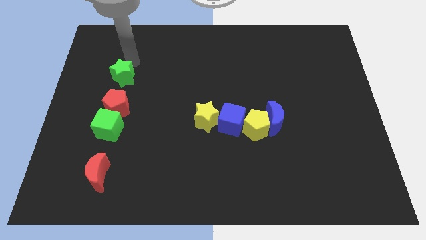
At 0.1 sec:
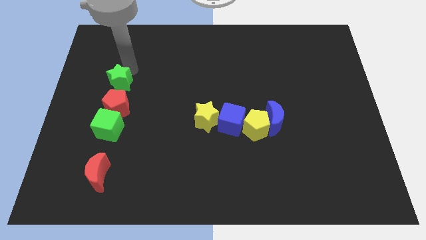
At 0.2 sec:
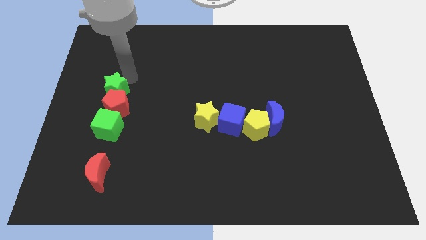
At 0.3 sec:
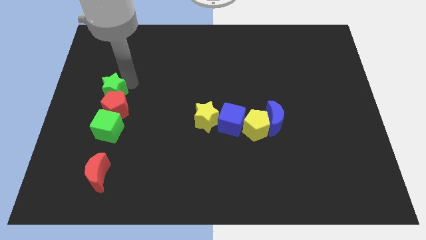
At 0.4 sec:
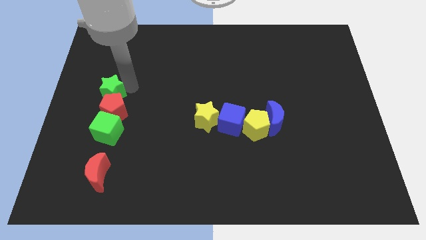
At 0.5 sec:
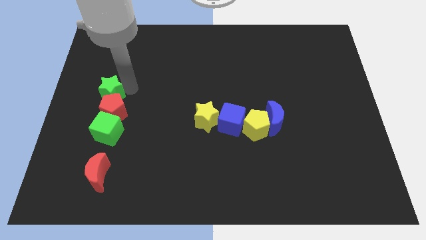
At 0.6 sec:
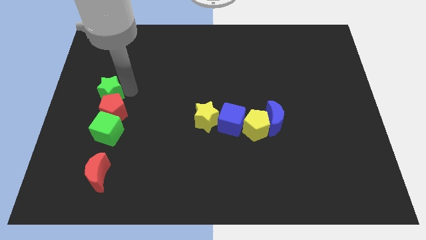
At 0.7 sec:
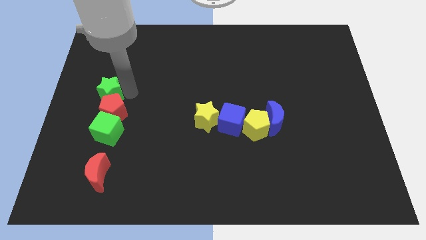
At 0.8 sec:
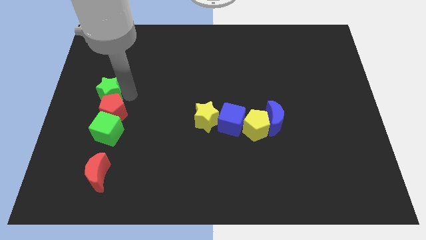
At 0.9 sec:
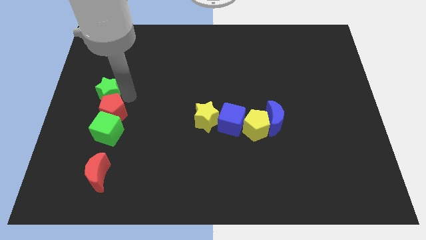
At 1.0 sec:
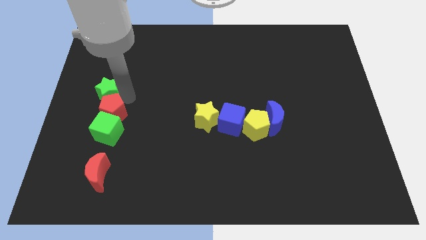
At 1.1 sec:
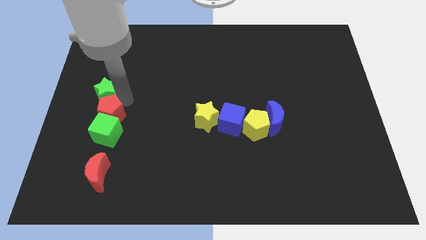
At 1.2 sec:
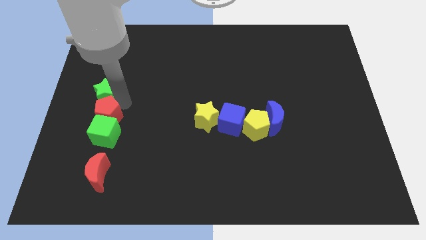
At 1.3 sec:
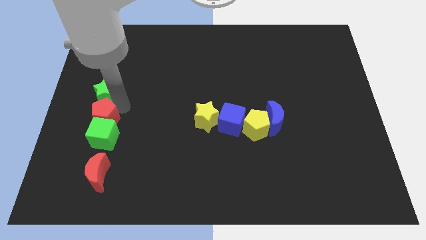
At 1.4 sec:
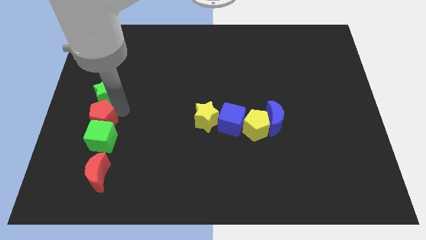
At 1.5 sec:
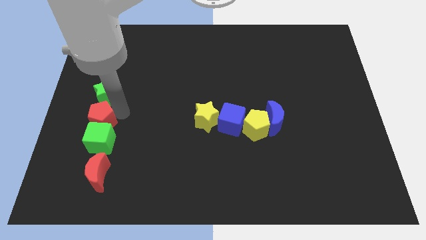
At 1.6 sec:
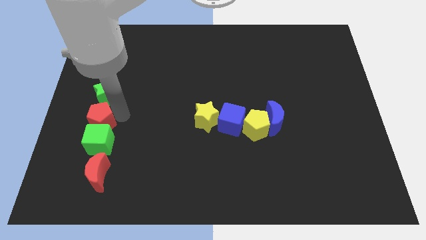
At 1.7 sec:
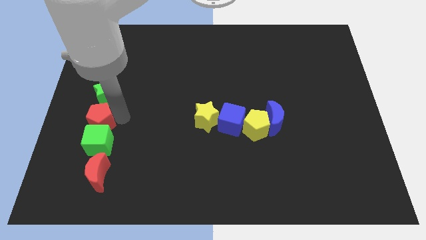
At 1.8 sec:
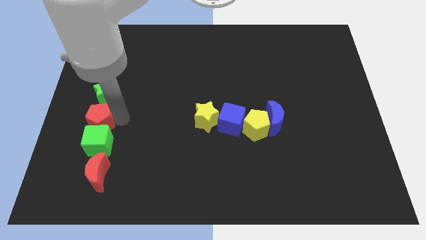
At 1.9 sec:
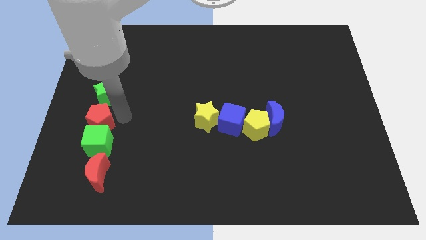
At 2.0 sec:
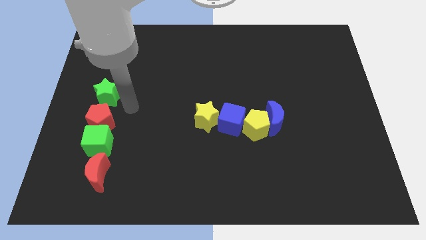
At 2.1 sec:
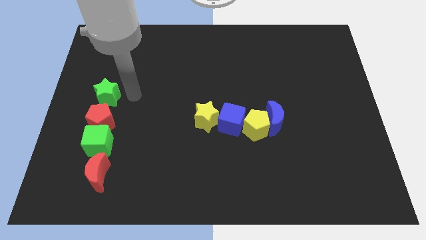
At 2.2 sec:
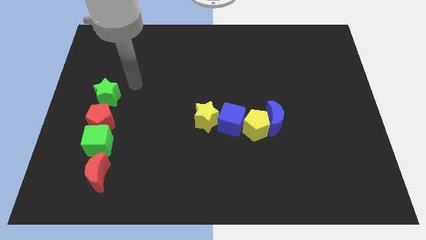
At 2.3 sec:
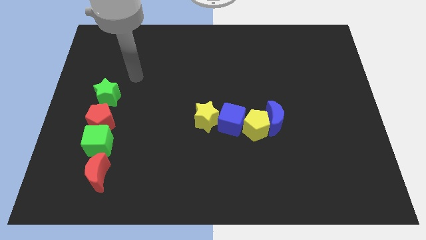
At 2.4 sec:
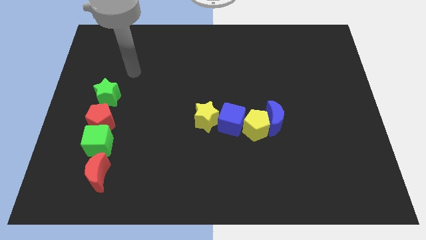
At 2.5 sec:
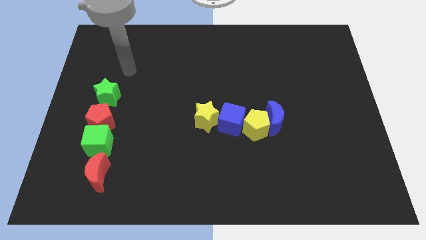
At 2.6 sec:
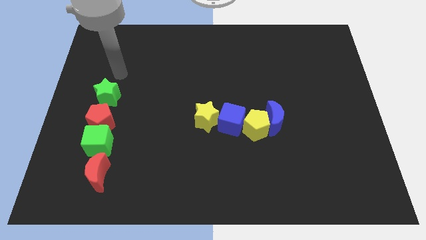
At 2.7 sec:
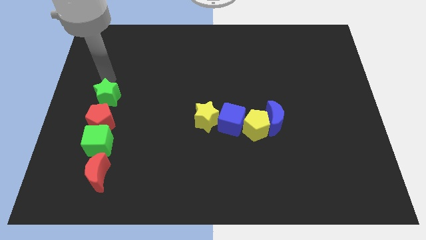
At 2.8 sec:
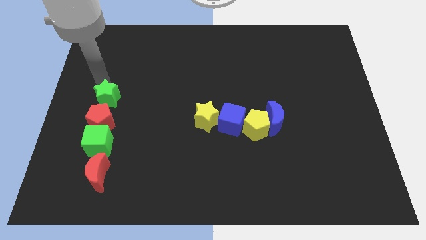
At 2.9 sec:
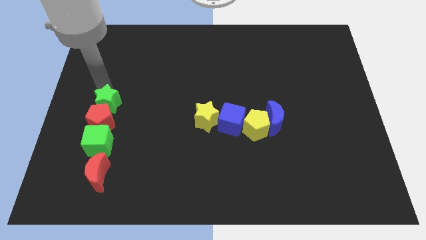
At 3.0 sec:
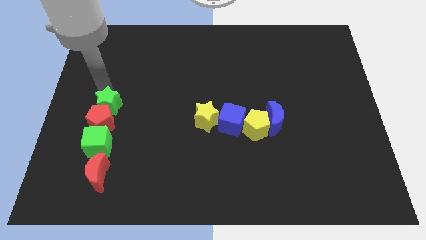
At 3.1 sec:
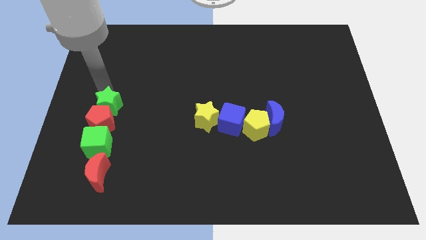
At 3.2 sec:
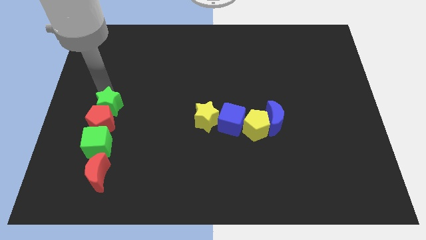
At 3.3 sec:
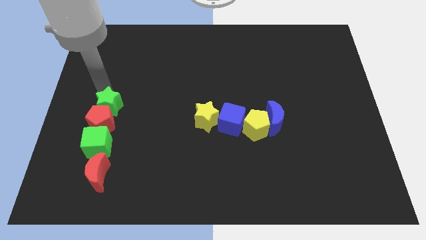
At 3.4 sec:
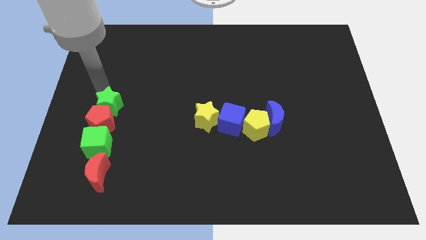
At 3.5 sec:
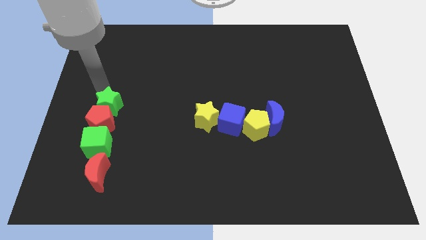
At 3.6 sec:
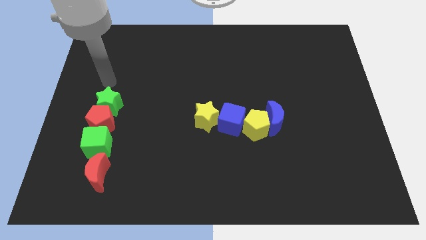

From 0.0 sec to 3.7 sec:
move a group of objects towards the red crescent

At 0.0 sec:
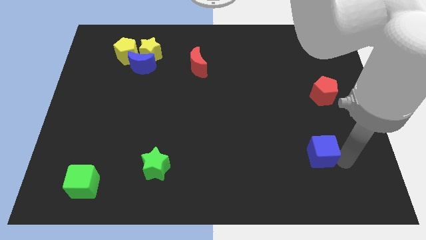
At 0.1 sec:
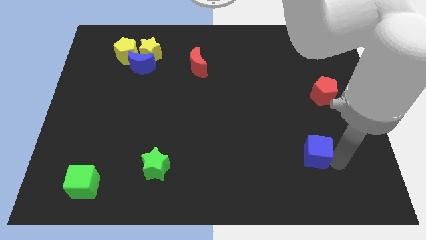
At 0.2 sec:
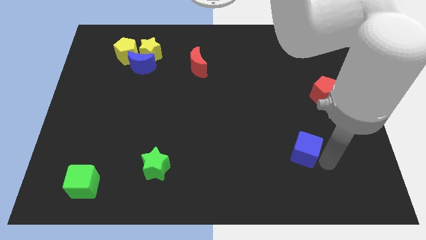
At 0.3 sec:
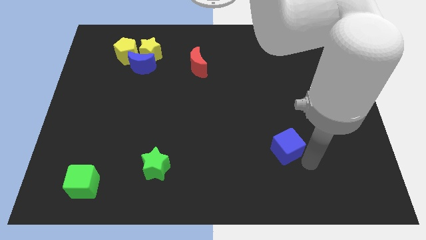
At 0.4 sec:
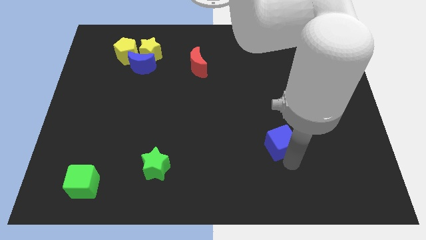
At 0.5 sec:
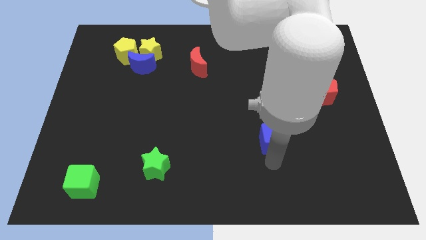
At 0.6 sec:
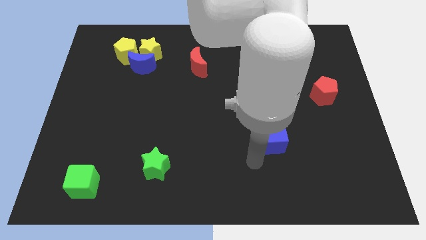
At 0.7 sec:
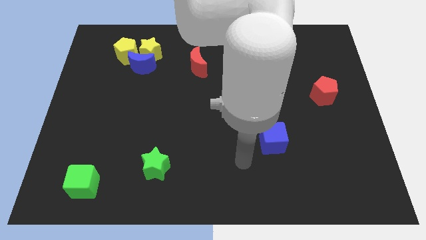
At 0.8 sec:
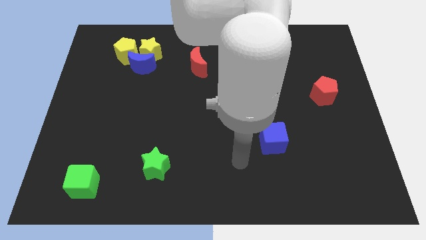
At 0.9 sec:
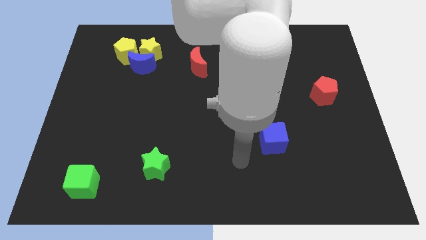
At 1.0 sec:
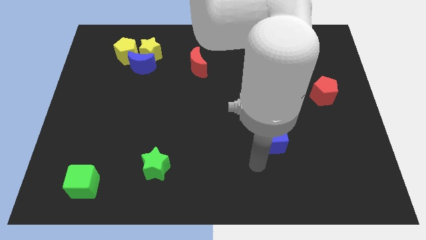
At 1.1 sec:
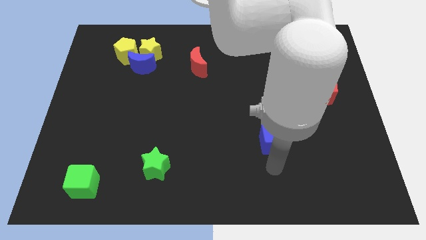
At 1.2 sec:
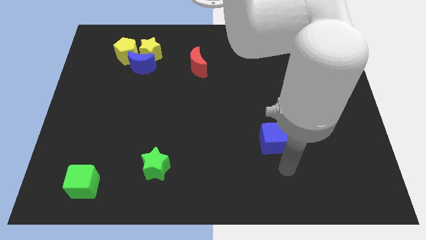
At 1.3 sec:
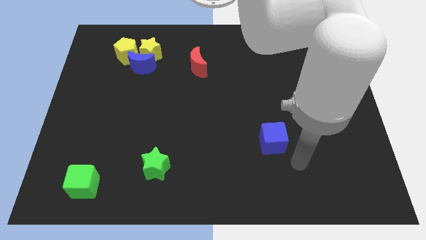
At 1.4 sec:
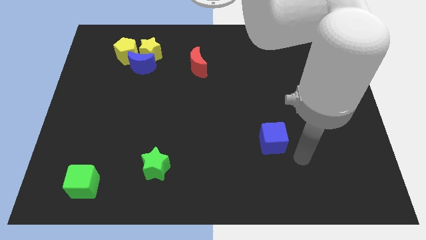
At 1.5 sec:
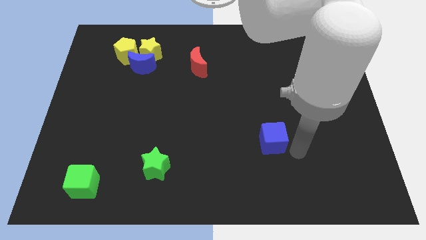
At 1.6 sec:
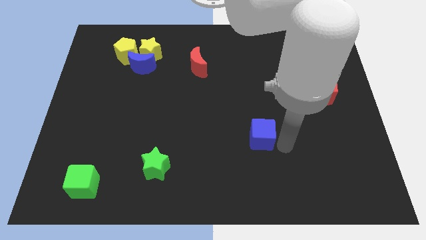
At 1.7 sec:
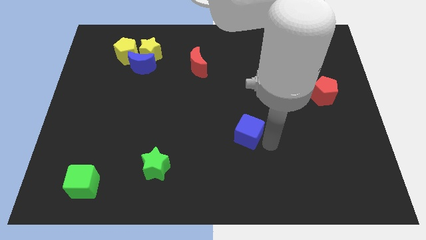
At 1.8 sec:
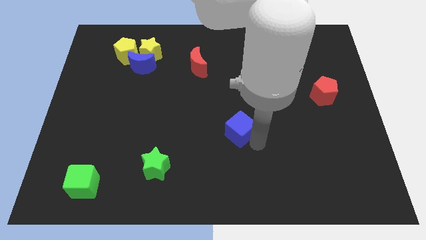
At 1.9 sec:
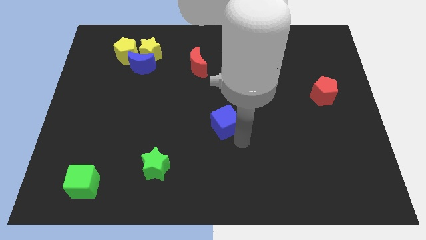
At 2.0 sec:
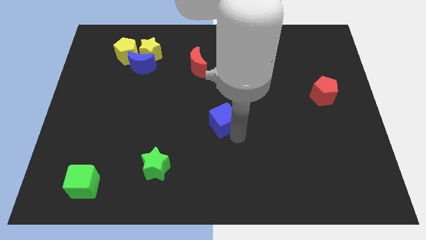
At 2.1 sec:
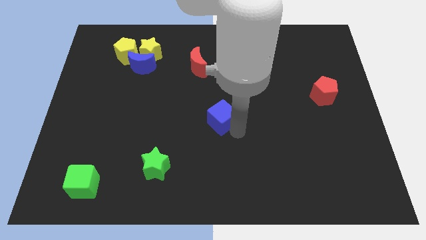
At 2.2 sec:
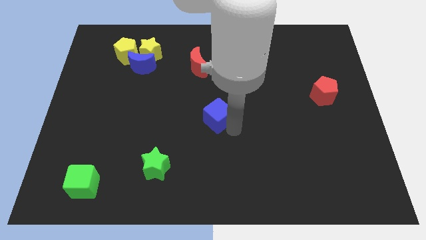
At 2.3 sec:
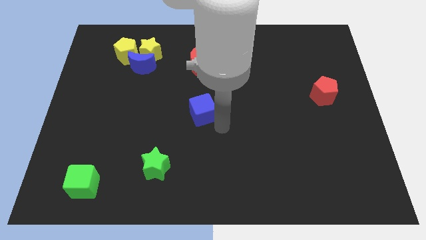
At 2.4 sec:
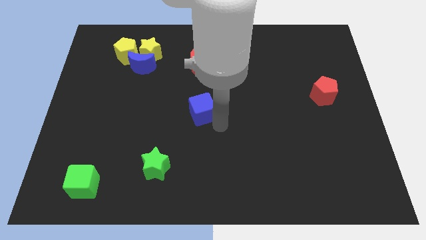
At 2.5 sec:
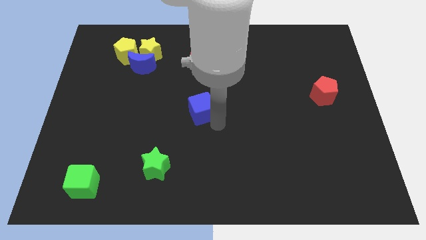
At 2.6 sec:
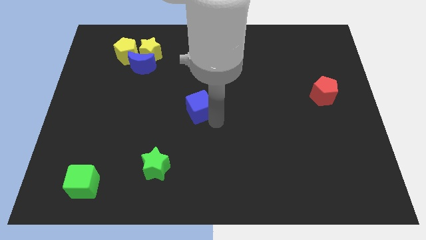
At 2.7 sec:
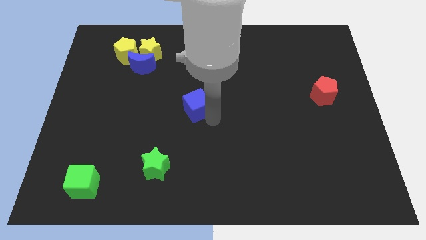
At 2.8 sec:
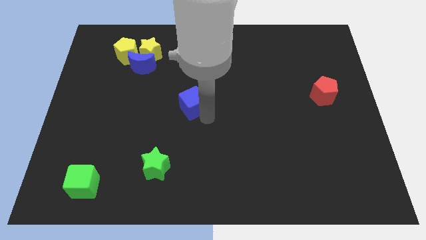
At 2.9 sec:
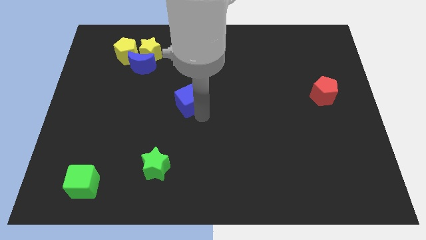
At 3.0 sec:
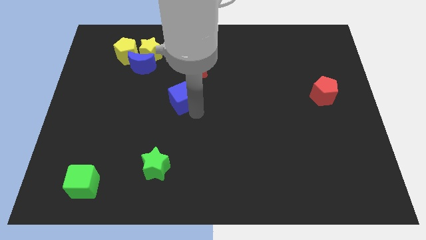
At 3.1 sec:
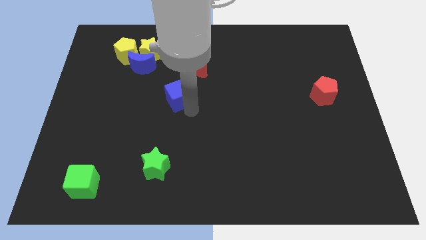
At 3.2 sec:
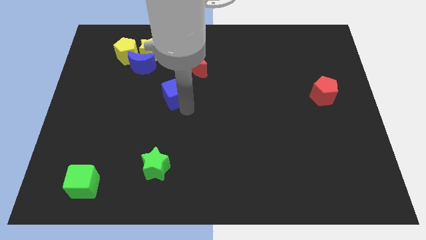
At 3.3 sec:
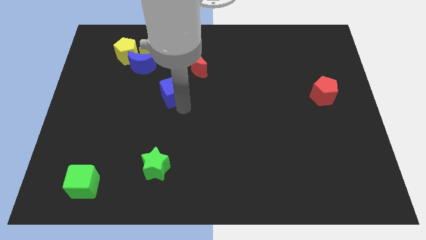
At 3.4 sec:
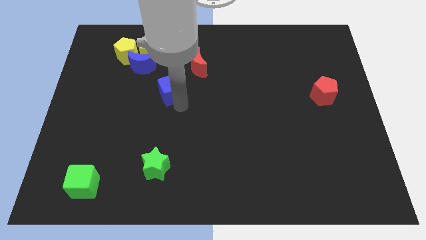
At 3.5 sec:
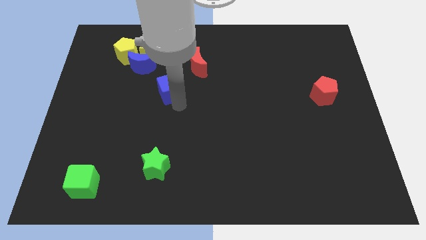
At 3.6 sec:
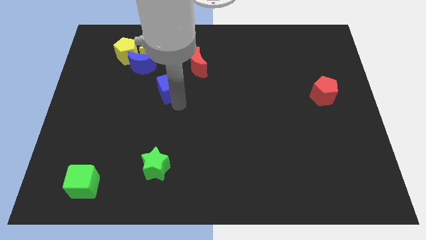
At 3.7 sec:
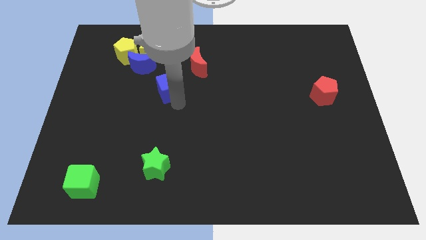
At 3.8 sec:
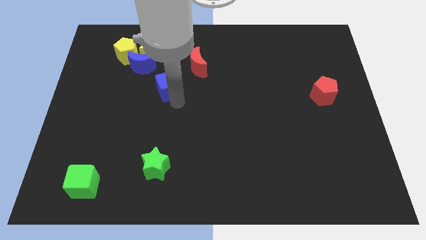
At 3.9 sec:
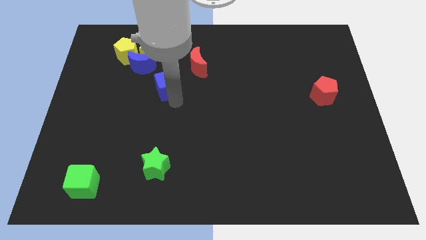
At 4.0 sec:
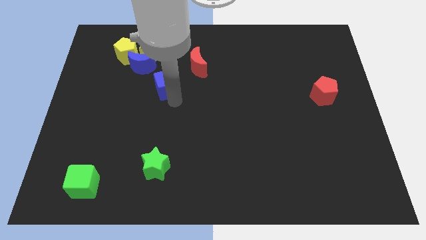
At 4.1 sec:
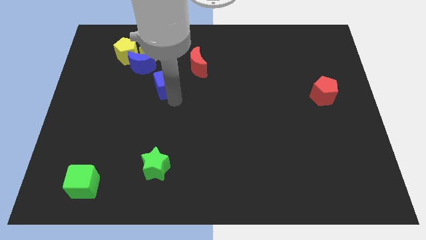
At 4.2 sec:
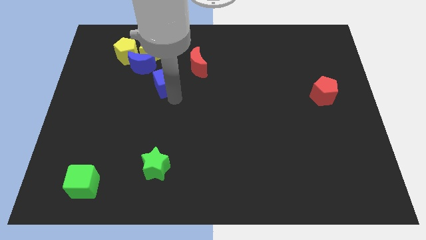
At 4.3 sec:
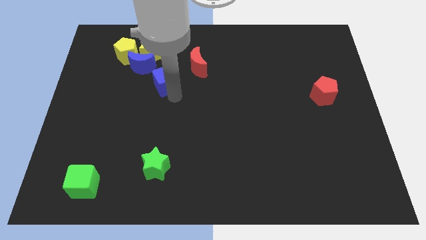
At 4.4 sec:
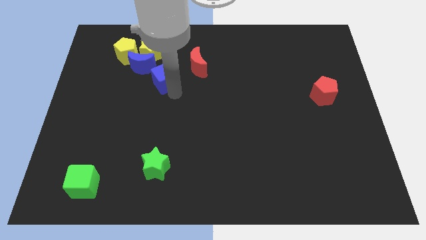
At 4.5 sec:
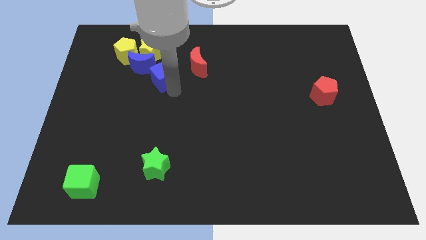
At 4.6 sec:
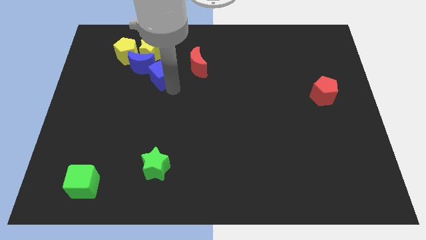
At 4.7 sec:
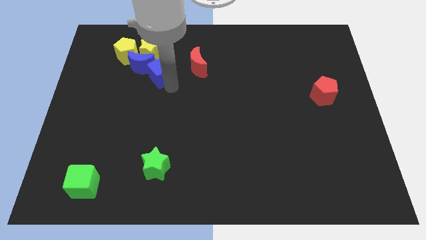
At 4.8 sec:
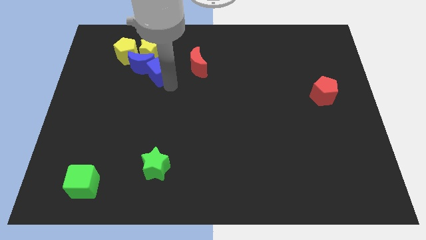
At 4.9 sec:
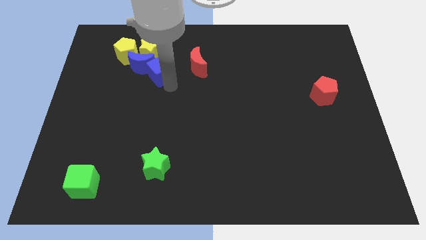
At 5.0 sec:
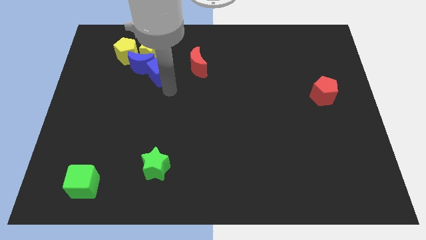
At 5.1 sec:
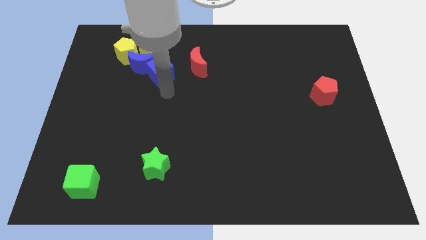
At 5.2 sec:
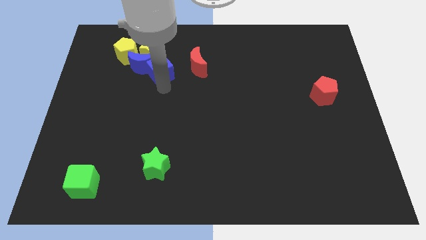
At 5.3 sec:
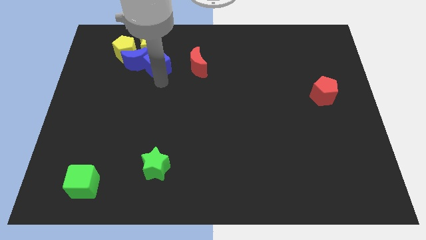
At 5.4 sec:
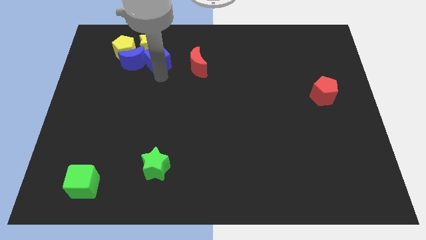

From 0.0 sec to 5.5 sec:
push the blue cube into the blue crescent
